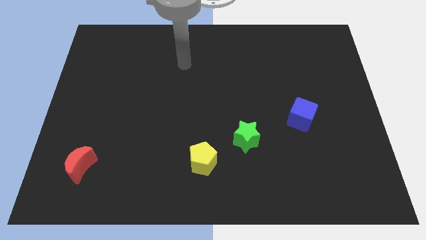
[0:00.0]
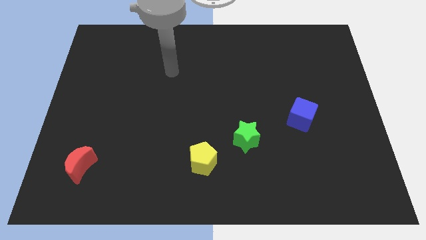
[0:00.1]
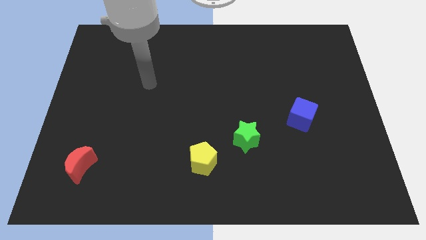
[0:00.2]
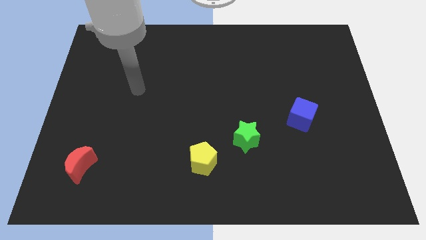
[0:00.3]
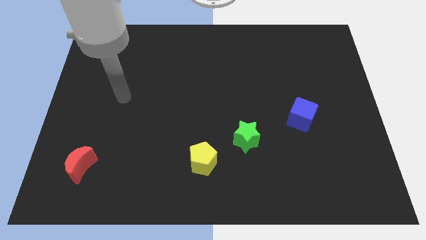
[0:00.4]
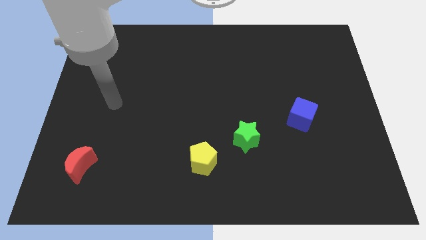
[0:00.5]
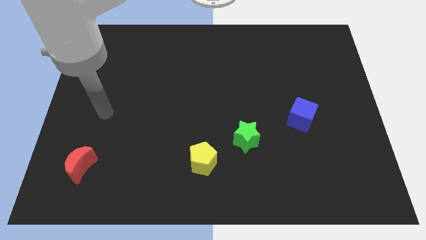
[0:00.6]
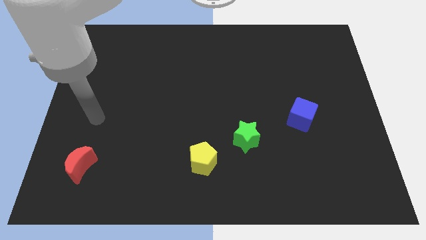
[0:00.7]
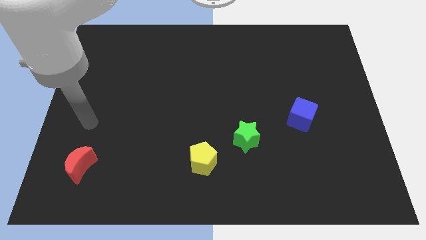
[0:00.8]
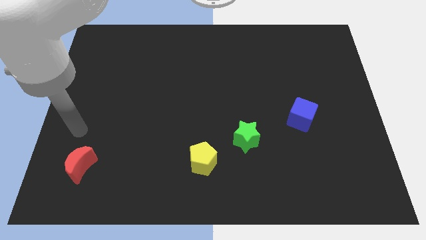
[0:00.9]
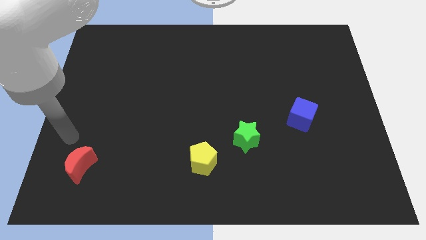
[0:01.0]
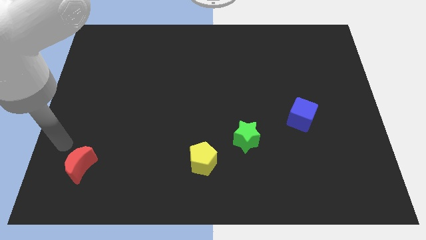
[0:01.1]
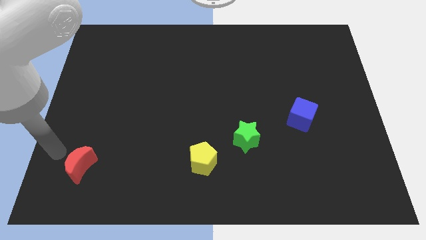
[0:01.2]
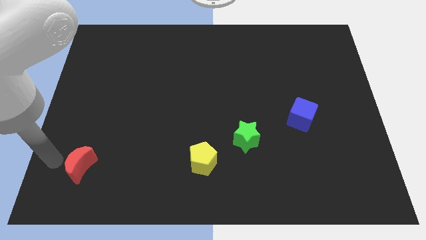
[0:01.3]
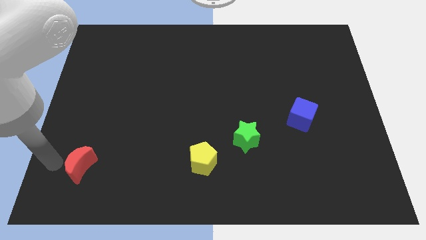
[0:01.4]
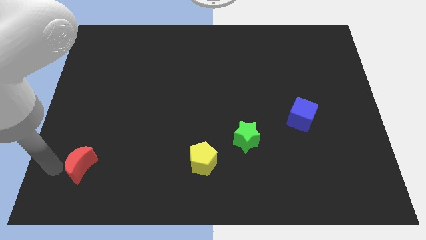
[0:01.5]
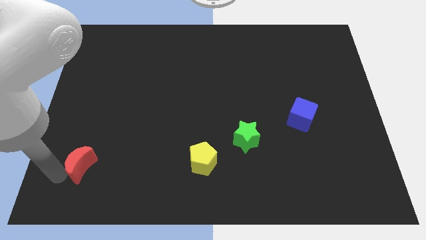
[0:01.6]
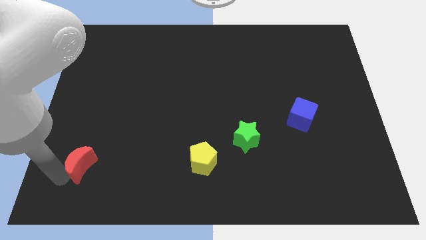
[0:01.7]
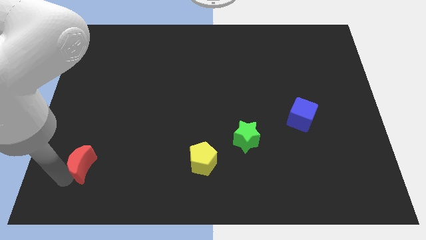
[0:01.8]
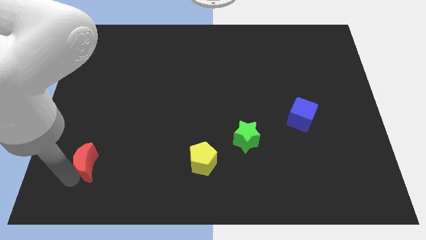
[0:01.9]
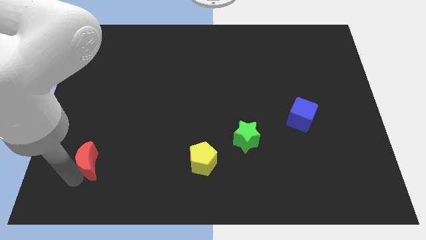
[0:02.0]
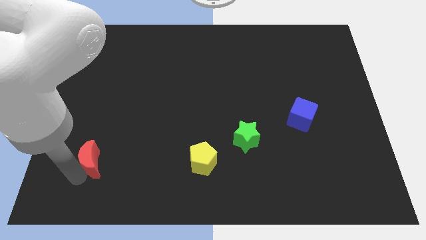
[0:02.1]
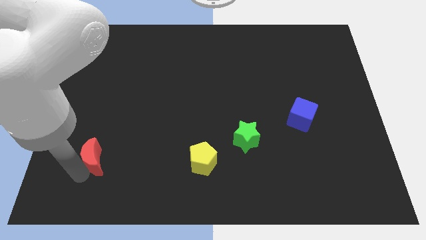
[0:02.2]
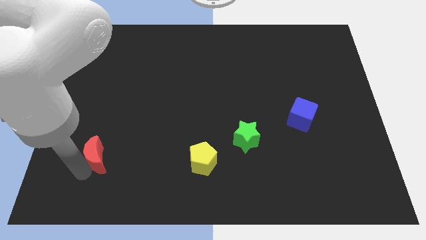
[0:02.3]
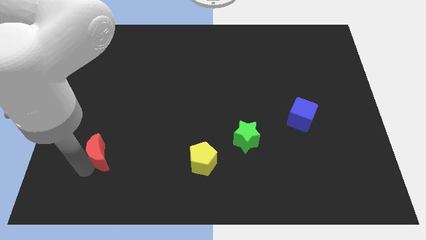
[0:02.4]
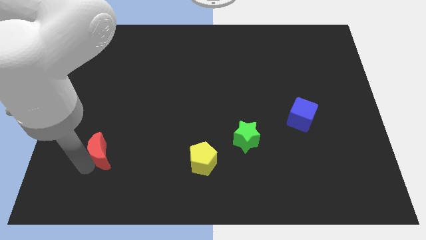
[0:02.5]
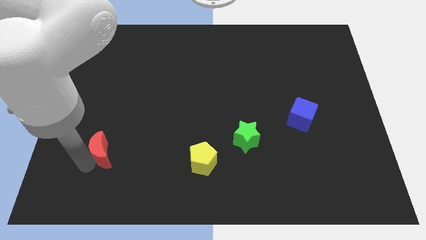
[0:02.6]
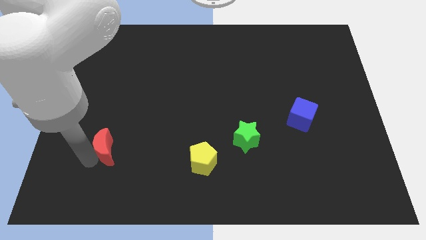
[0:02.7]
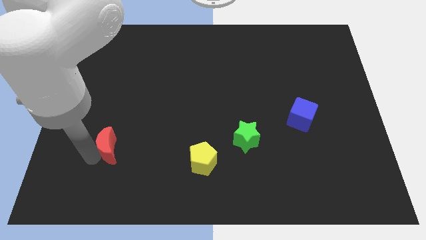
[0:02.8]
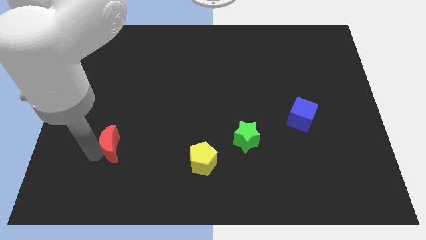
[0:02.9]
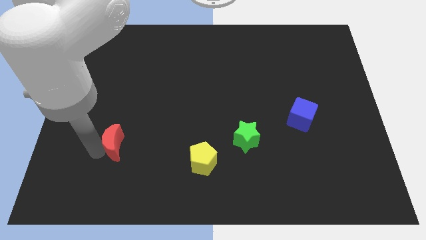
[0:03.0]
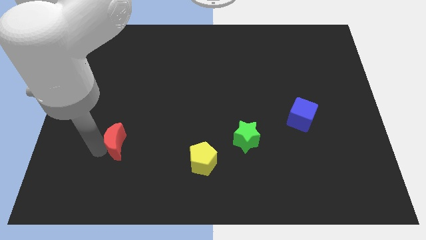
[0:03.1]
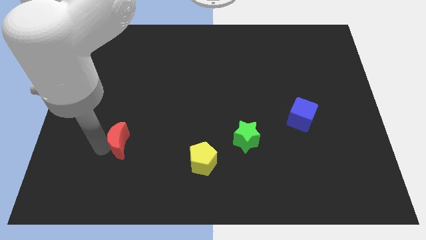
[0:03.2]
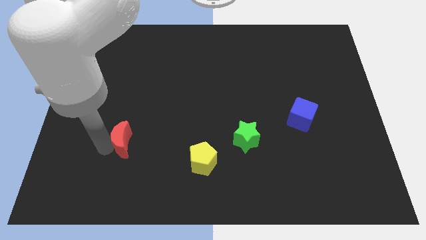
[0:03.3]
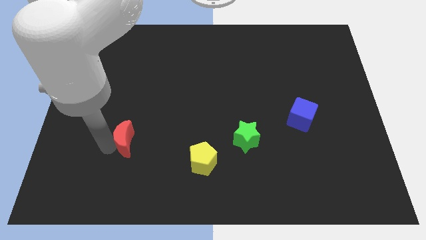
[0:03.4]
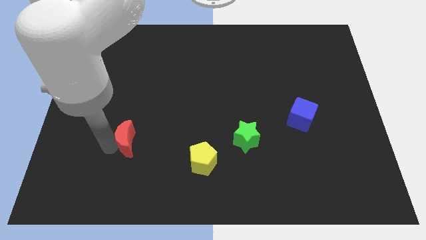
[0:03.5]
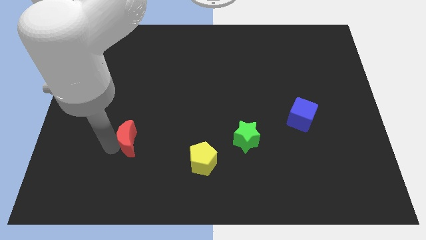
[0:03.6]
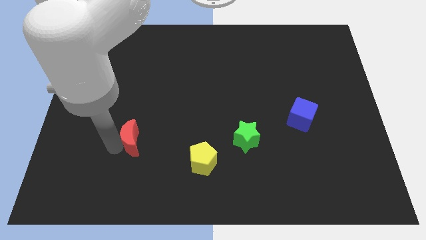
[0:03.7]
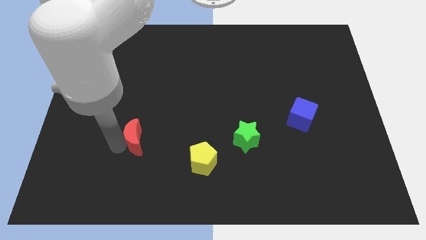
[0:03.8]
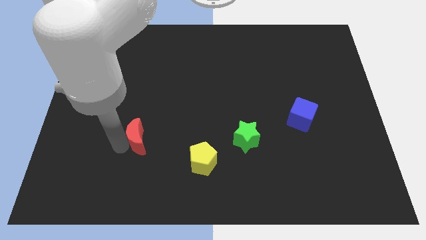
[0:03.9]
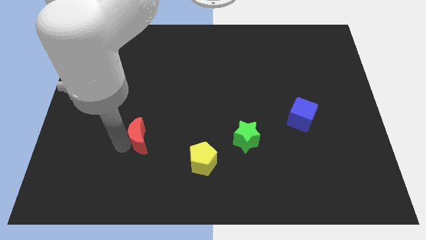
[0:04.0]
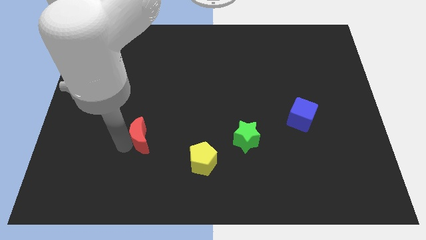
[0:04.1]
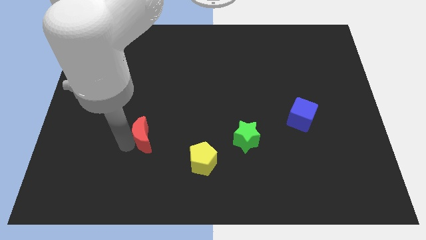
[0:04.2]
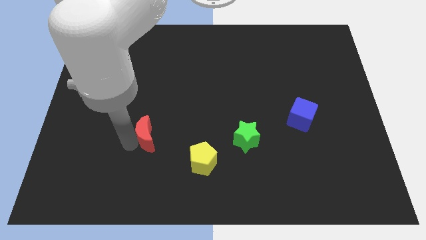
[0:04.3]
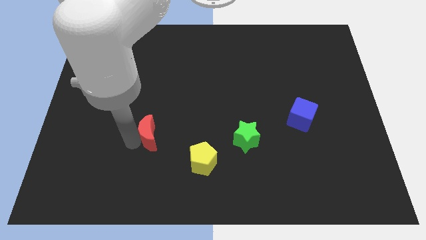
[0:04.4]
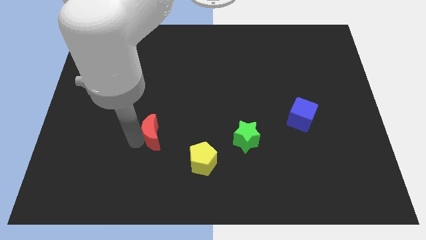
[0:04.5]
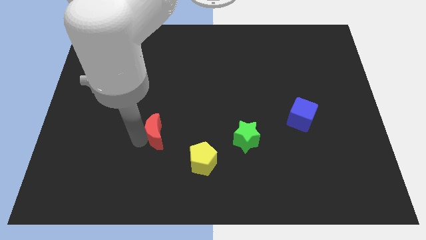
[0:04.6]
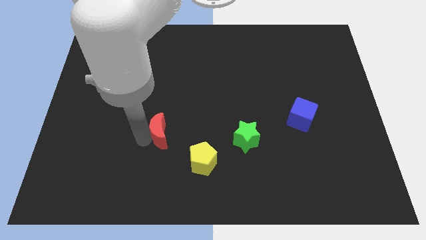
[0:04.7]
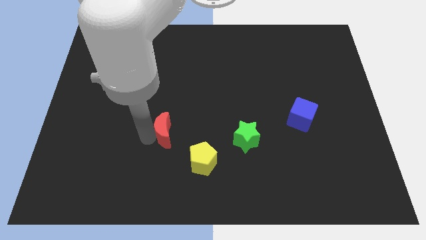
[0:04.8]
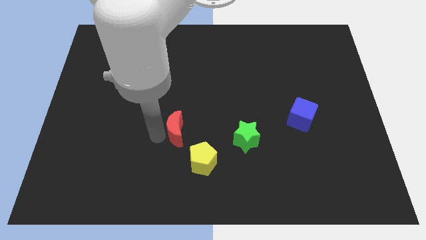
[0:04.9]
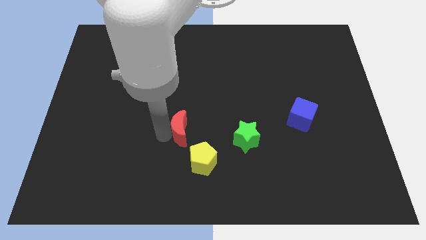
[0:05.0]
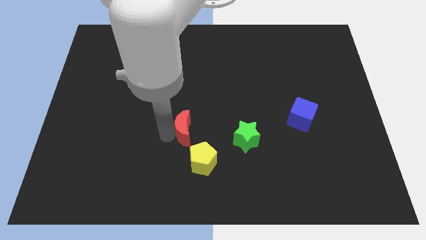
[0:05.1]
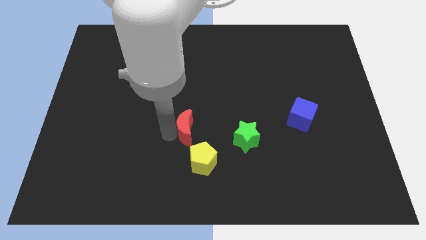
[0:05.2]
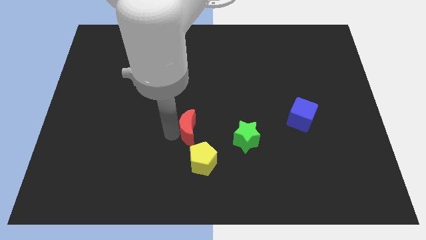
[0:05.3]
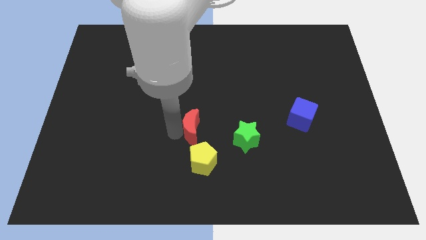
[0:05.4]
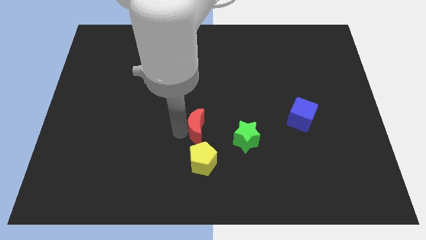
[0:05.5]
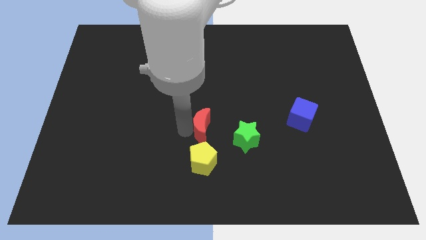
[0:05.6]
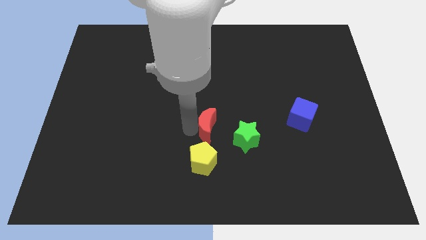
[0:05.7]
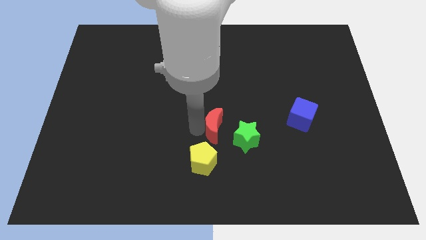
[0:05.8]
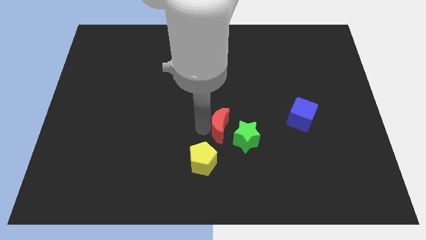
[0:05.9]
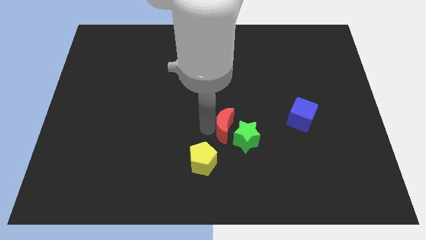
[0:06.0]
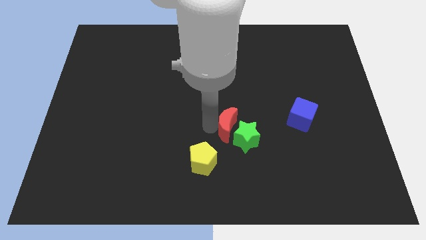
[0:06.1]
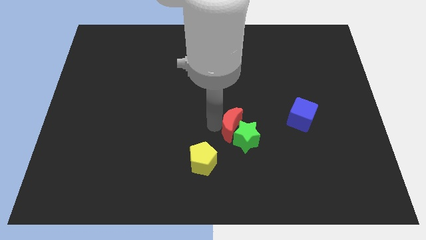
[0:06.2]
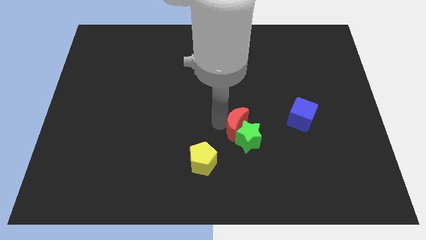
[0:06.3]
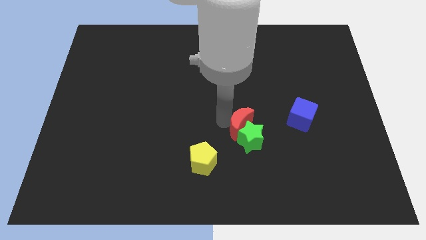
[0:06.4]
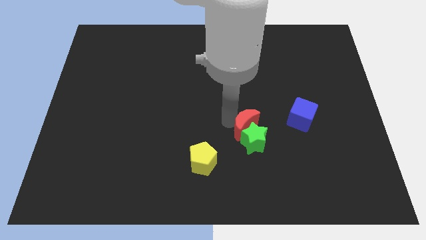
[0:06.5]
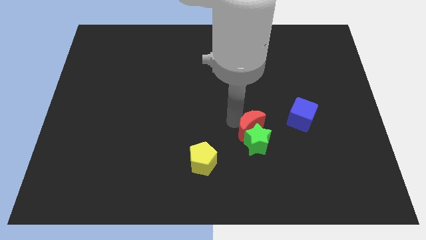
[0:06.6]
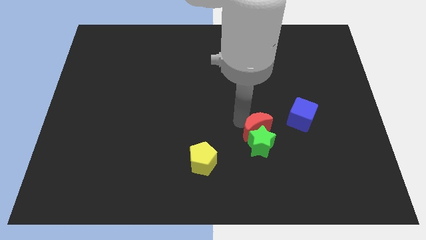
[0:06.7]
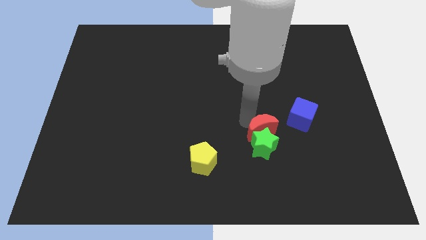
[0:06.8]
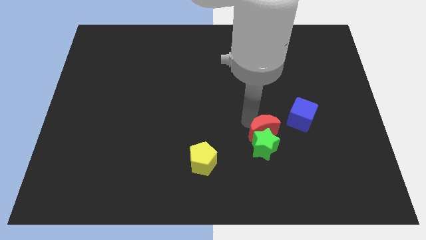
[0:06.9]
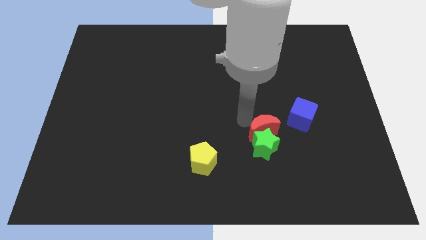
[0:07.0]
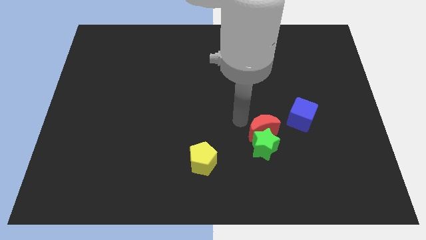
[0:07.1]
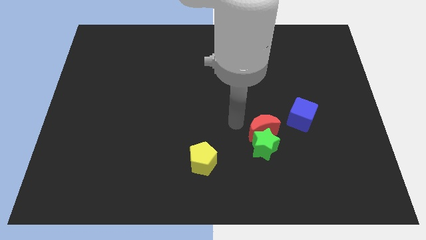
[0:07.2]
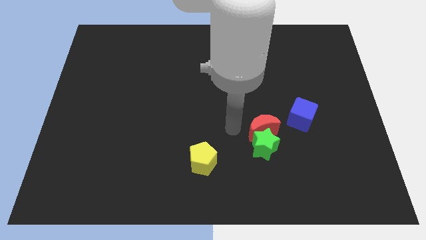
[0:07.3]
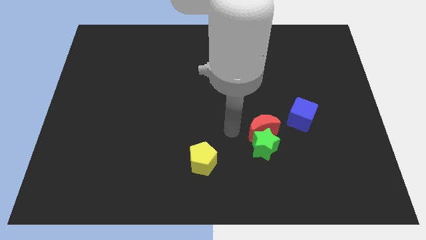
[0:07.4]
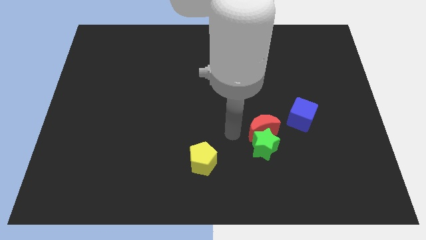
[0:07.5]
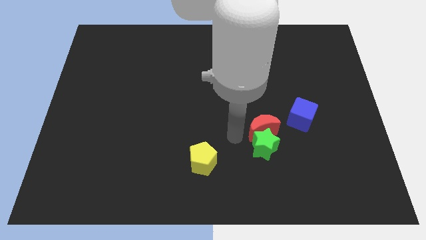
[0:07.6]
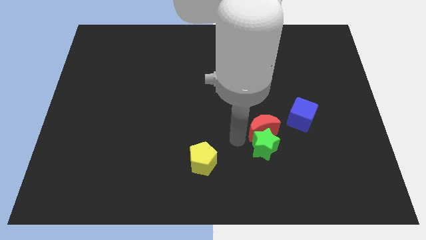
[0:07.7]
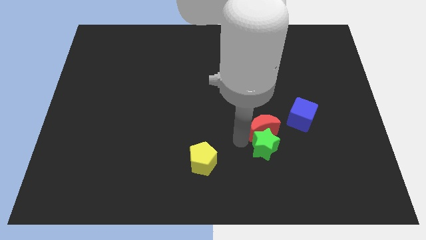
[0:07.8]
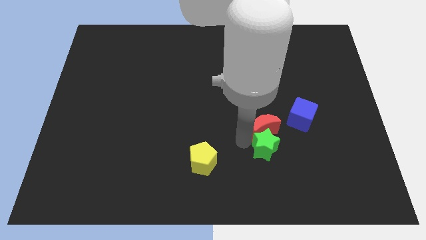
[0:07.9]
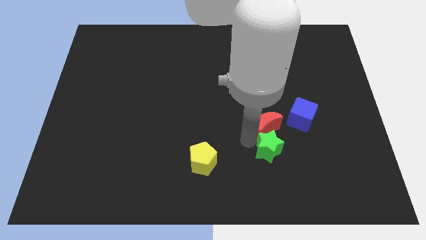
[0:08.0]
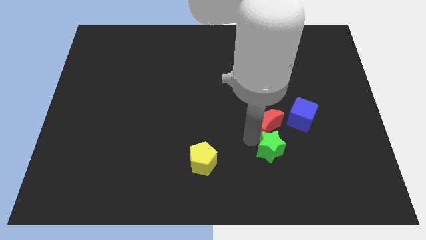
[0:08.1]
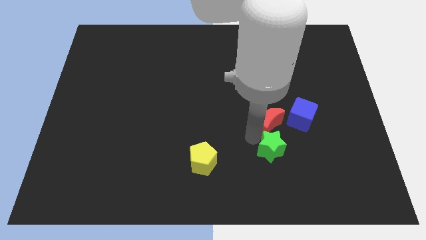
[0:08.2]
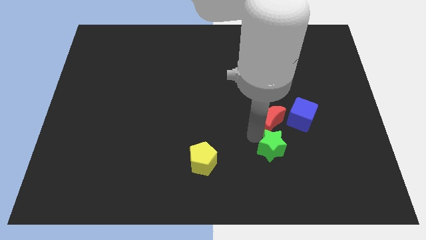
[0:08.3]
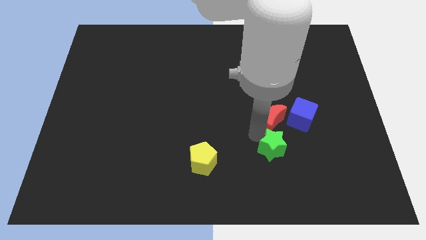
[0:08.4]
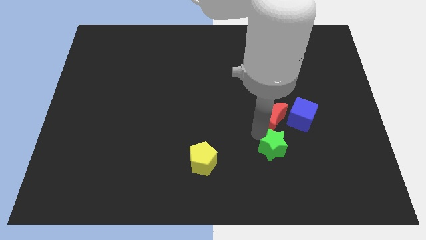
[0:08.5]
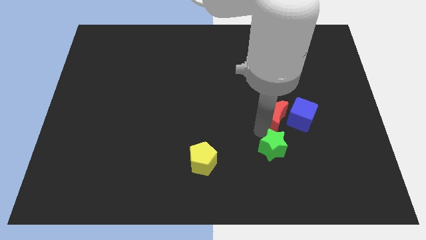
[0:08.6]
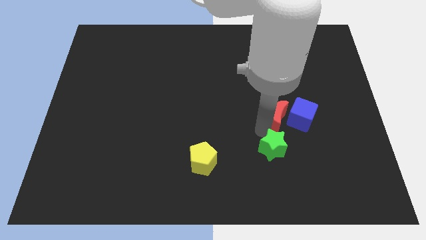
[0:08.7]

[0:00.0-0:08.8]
put the moon towards the blue cube
